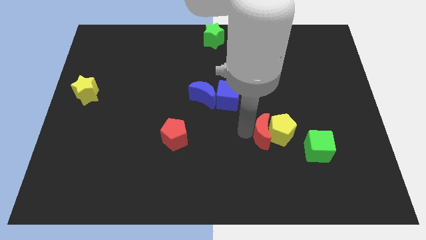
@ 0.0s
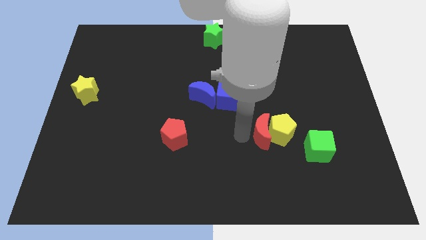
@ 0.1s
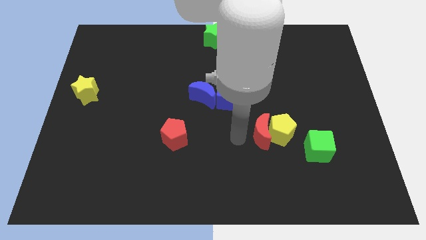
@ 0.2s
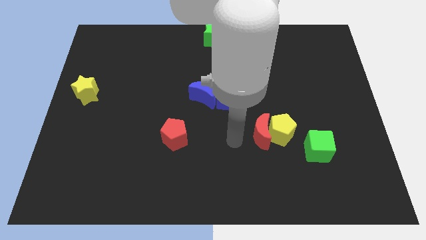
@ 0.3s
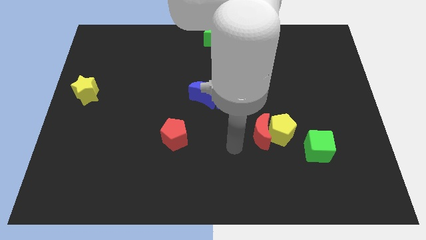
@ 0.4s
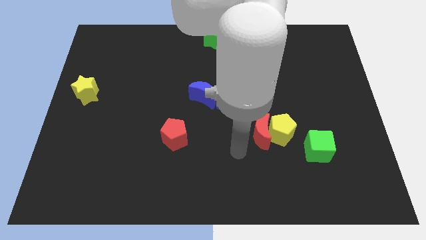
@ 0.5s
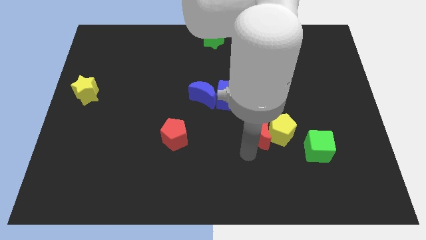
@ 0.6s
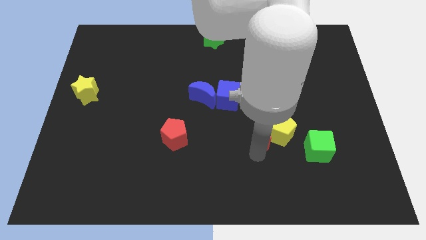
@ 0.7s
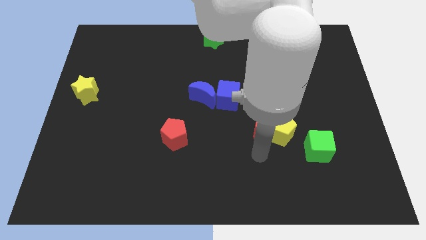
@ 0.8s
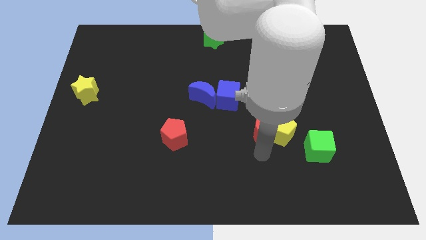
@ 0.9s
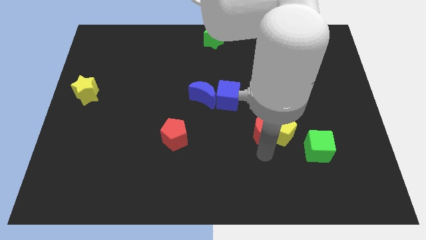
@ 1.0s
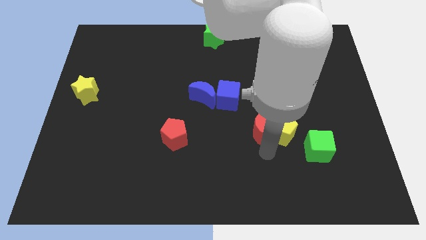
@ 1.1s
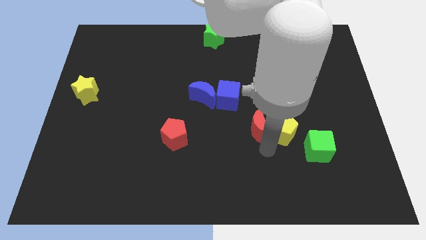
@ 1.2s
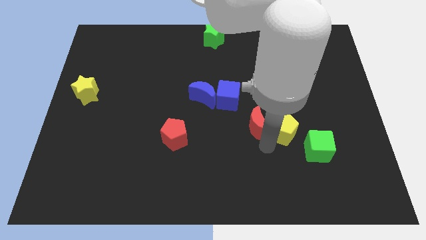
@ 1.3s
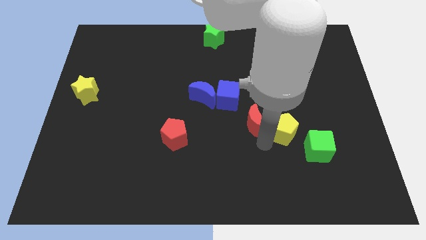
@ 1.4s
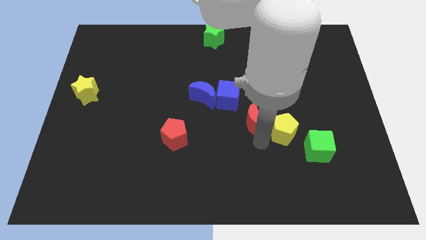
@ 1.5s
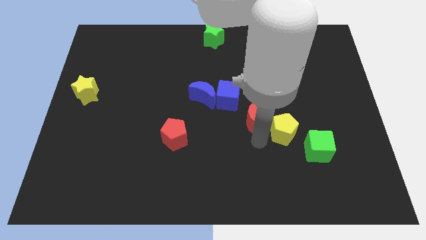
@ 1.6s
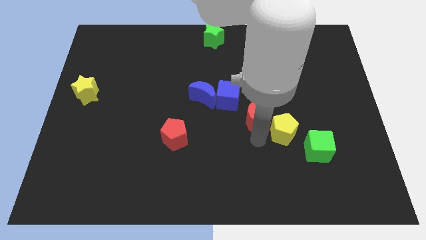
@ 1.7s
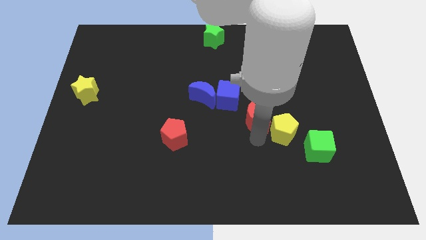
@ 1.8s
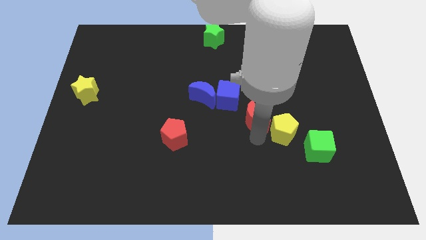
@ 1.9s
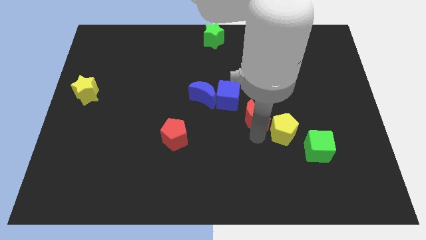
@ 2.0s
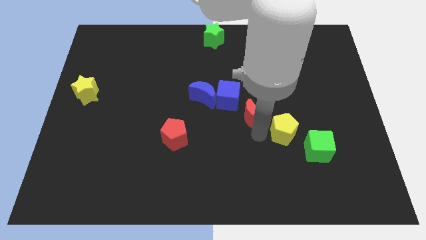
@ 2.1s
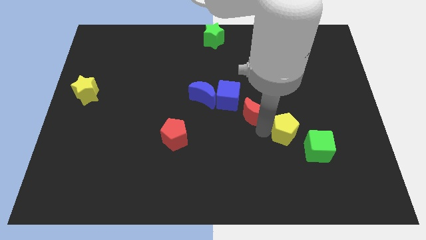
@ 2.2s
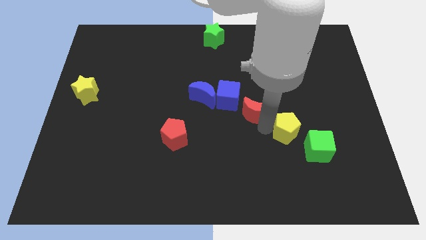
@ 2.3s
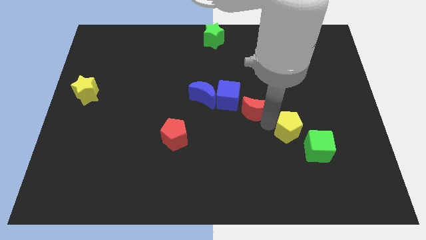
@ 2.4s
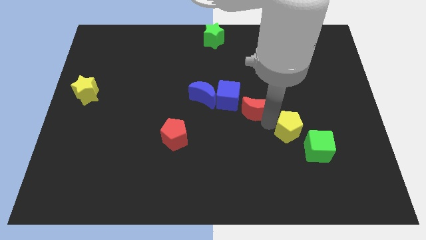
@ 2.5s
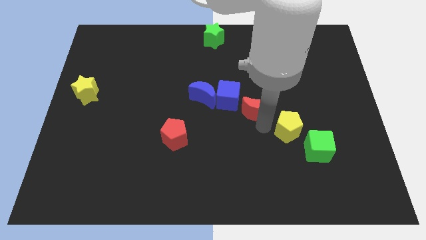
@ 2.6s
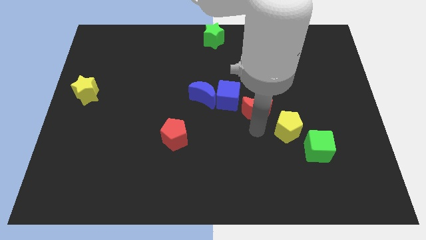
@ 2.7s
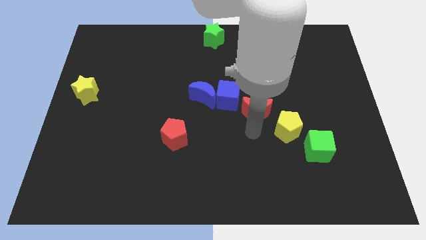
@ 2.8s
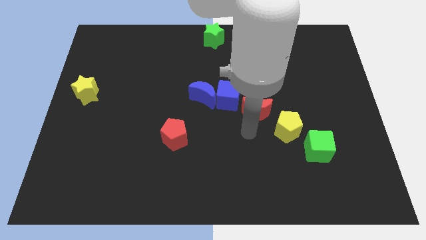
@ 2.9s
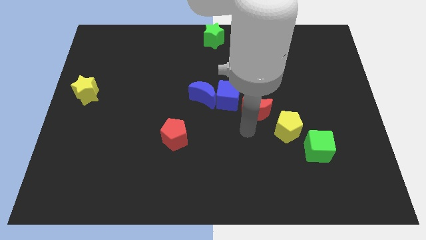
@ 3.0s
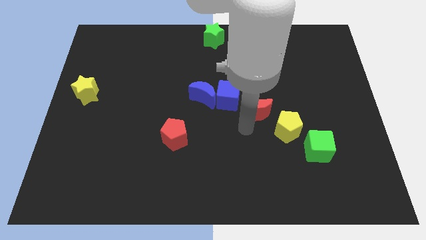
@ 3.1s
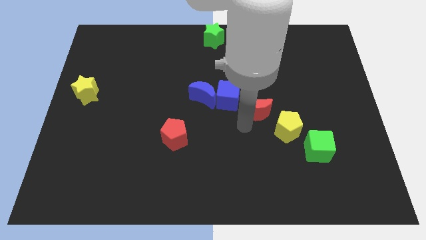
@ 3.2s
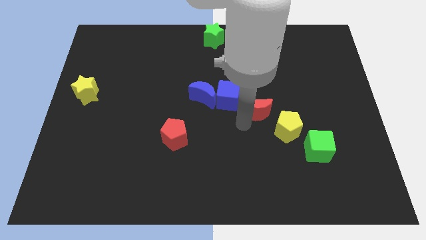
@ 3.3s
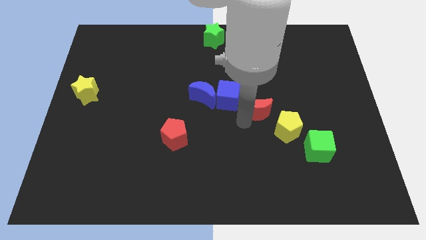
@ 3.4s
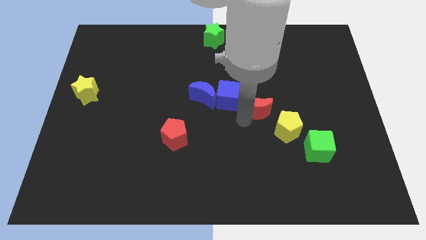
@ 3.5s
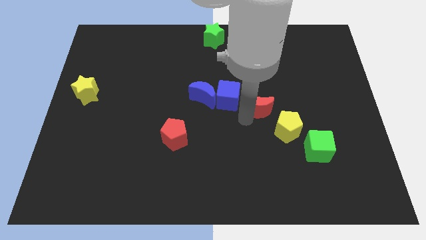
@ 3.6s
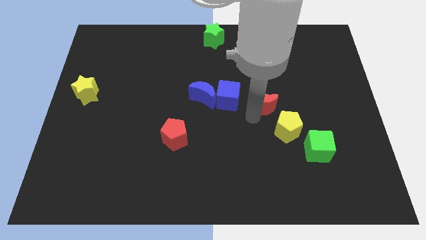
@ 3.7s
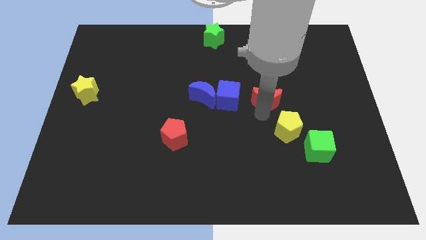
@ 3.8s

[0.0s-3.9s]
place the red moon right to the blue cube

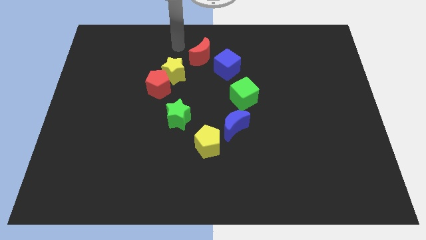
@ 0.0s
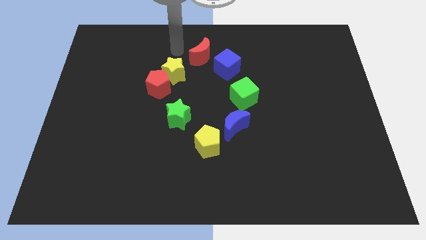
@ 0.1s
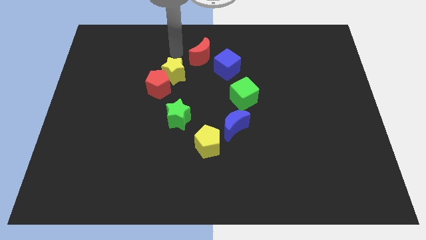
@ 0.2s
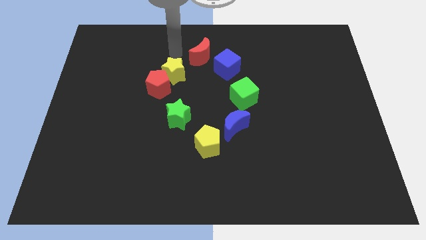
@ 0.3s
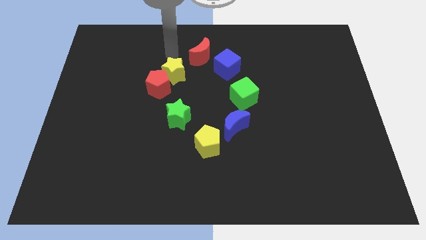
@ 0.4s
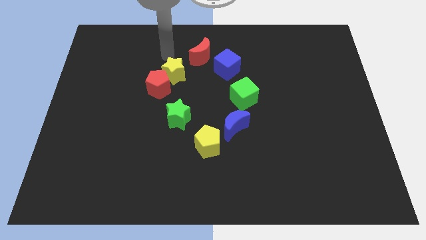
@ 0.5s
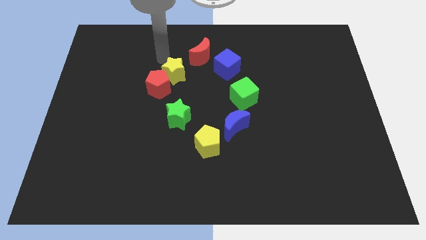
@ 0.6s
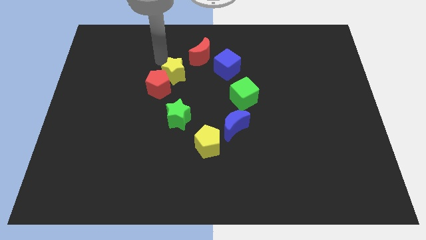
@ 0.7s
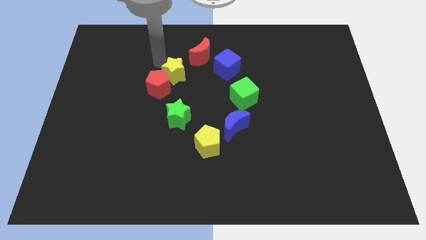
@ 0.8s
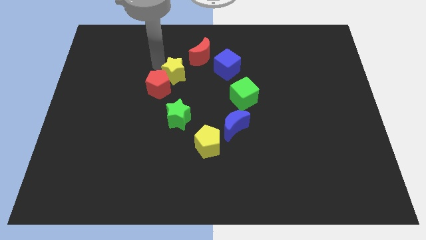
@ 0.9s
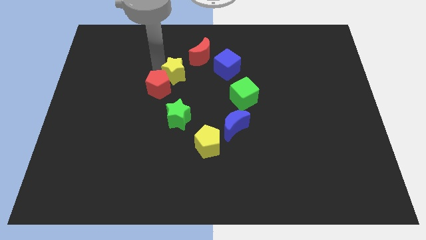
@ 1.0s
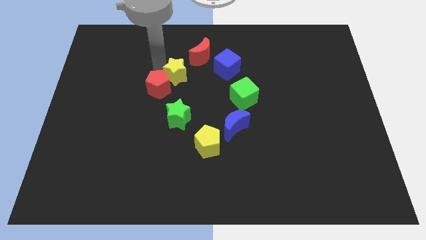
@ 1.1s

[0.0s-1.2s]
place the arm close to the yellow star

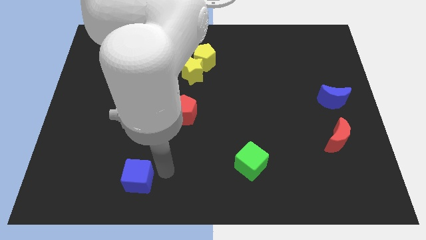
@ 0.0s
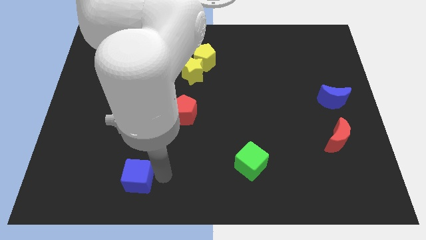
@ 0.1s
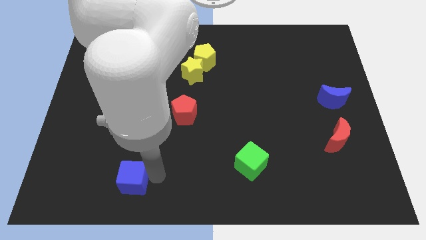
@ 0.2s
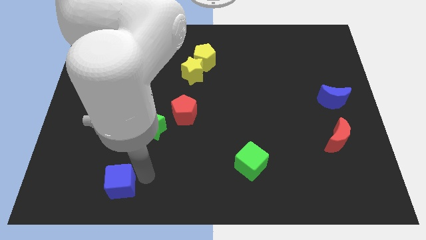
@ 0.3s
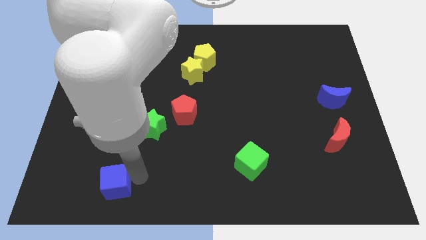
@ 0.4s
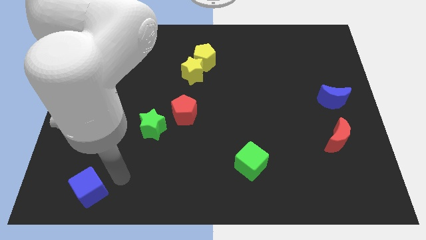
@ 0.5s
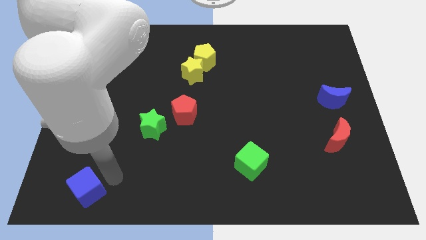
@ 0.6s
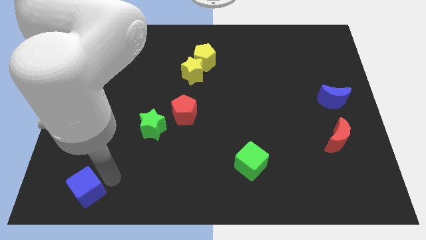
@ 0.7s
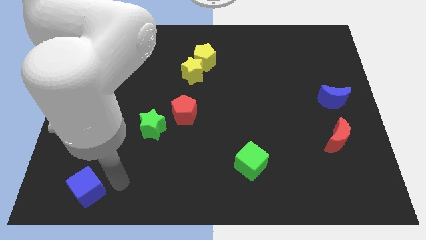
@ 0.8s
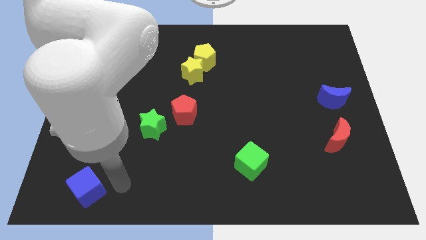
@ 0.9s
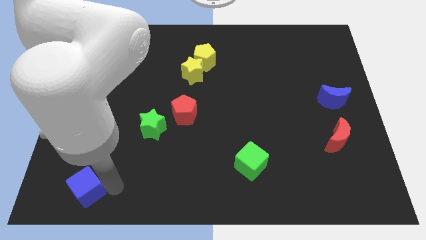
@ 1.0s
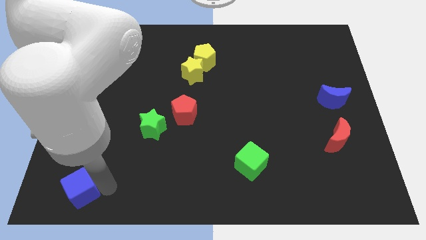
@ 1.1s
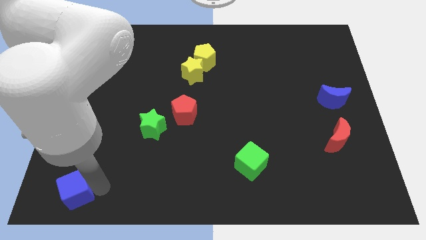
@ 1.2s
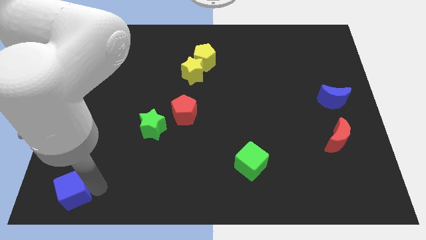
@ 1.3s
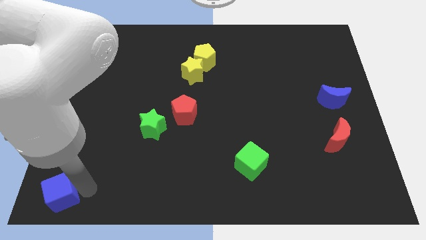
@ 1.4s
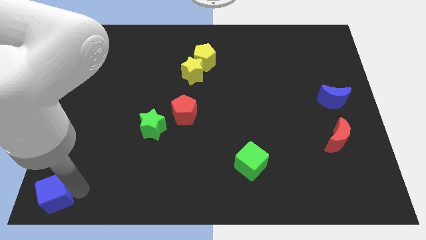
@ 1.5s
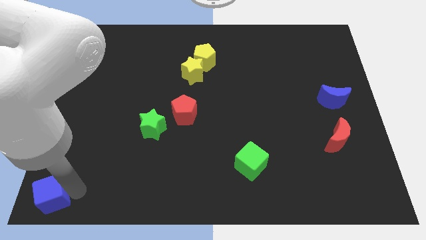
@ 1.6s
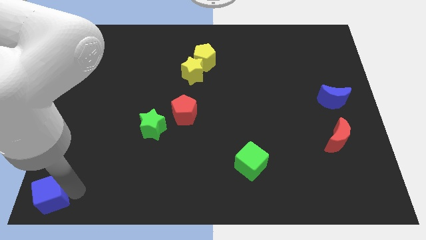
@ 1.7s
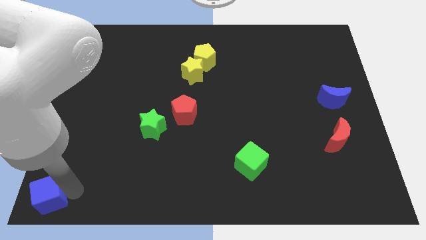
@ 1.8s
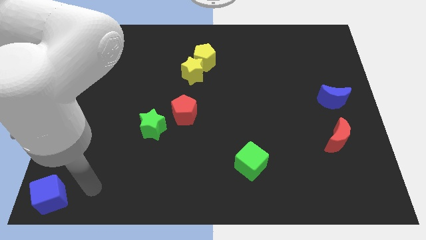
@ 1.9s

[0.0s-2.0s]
push the blue cube towards the bottom left side of the board

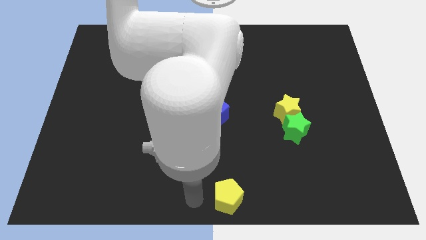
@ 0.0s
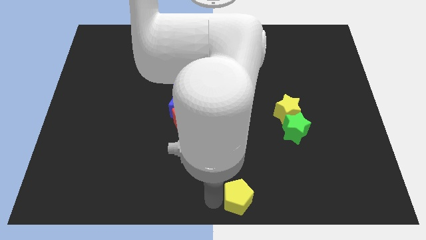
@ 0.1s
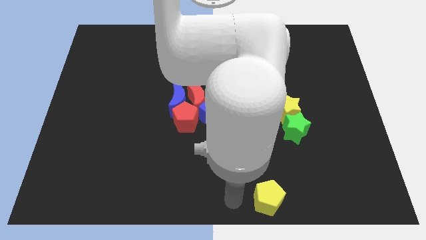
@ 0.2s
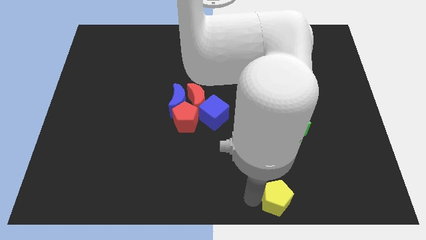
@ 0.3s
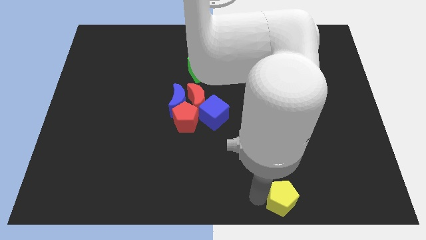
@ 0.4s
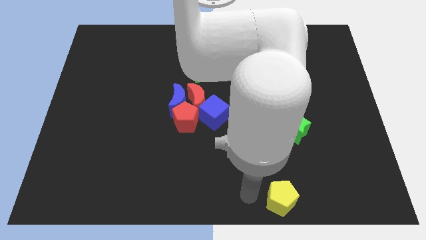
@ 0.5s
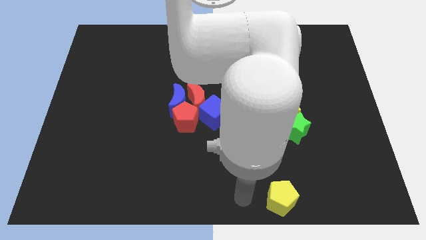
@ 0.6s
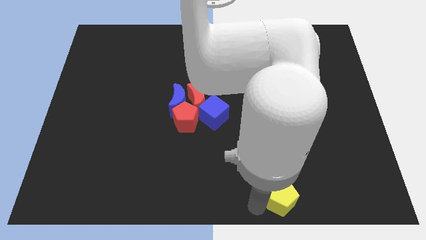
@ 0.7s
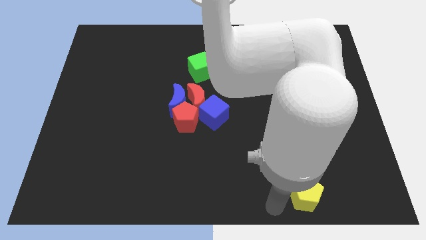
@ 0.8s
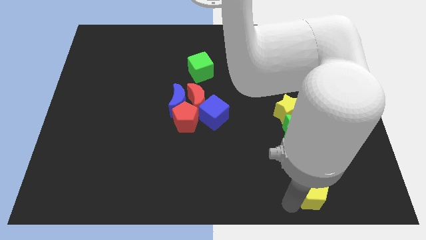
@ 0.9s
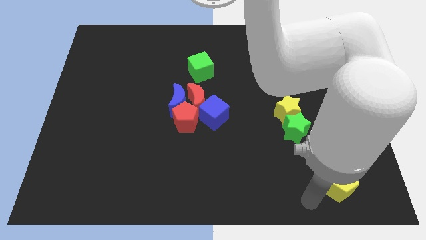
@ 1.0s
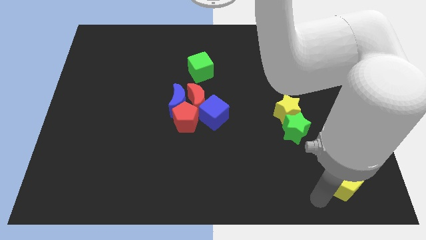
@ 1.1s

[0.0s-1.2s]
move the yellow pentagon diagonally bottom right to the green star

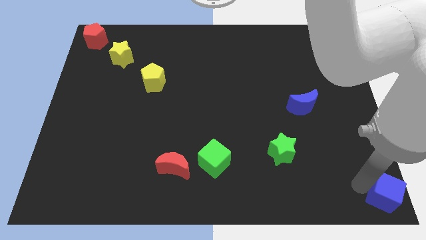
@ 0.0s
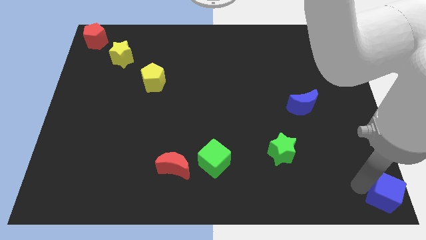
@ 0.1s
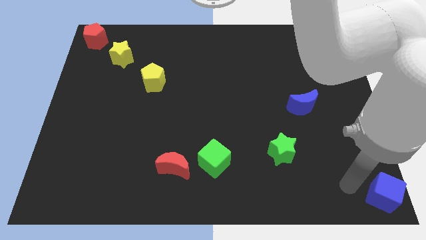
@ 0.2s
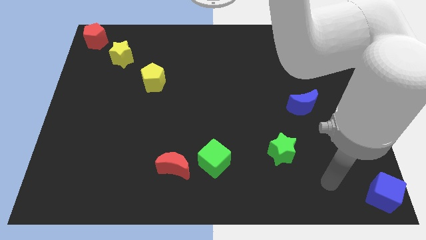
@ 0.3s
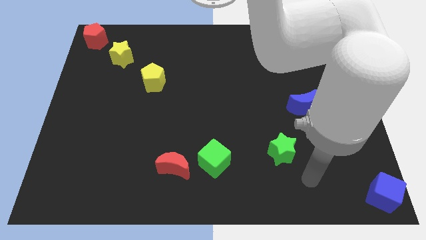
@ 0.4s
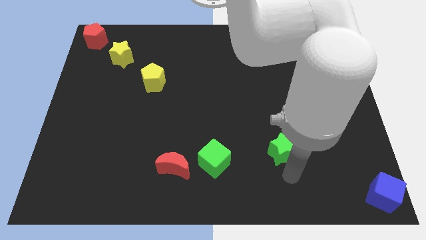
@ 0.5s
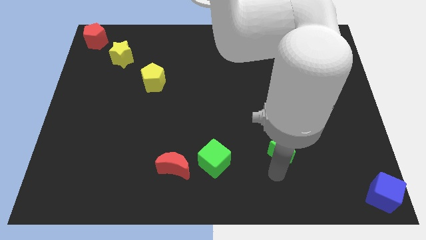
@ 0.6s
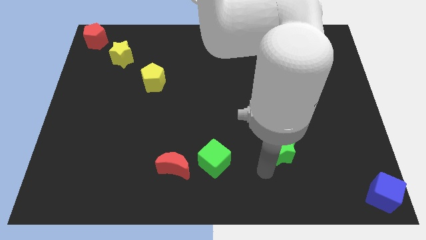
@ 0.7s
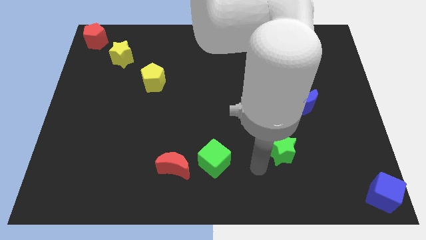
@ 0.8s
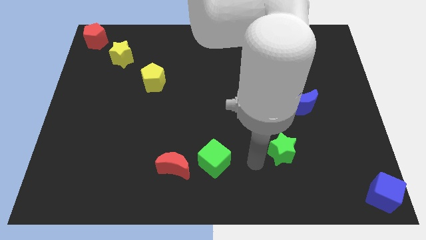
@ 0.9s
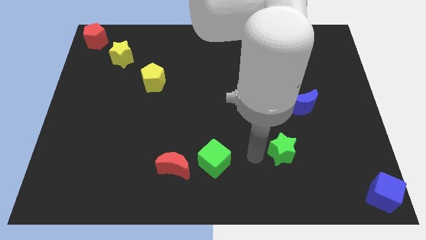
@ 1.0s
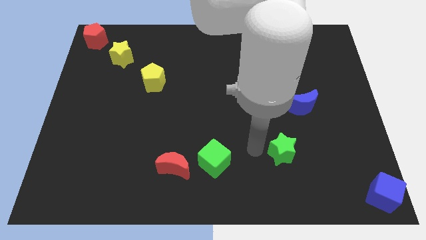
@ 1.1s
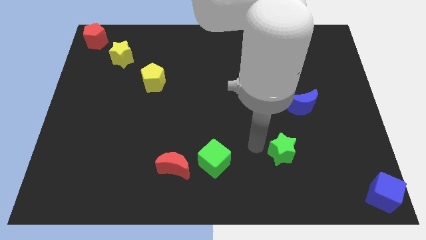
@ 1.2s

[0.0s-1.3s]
move your arm away from the blue cube
